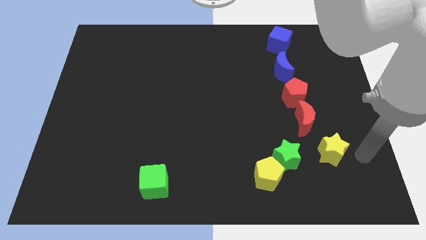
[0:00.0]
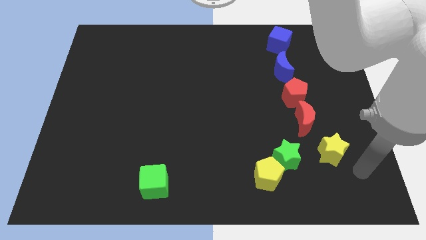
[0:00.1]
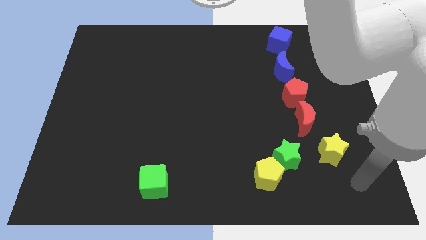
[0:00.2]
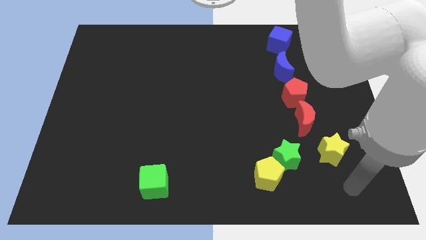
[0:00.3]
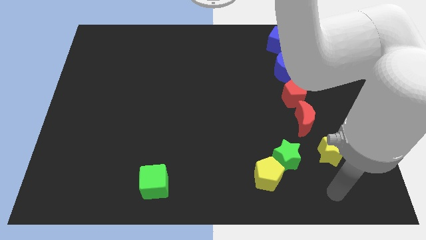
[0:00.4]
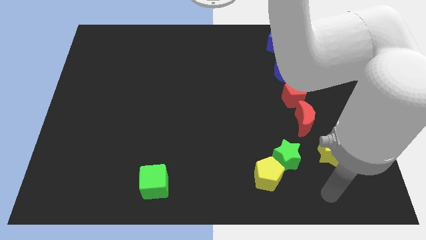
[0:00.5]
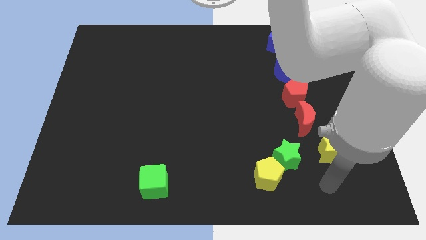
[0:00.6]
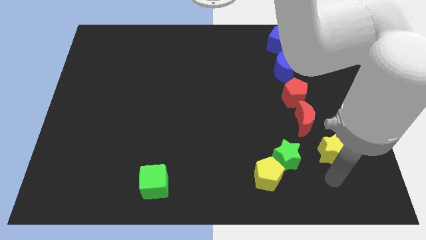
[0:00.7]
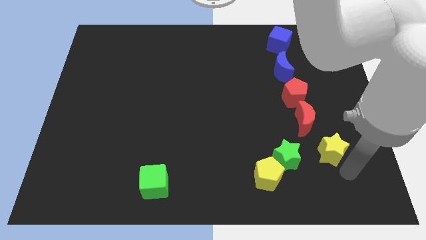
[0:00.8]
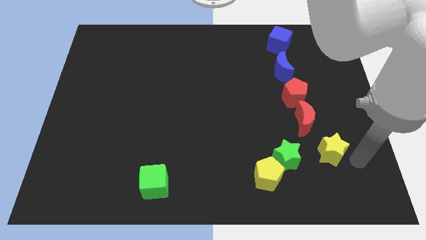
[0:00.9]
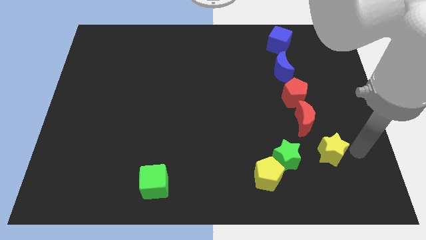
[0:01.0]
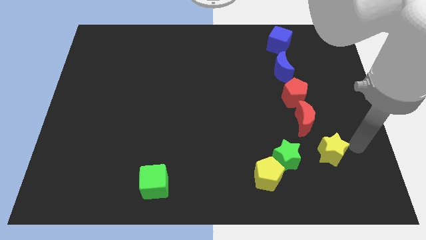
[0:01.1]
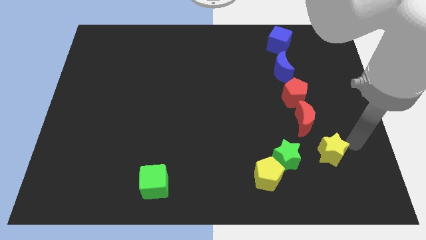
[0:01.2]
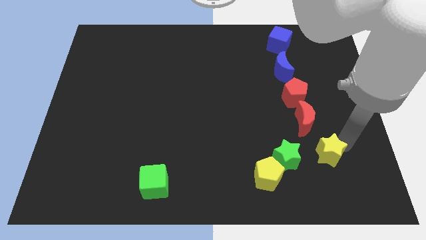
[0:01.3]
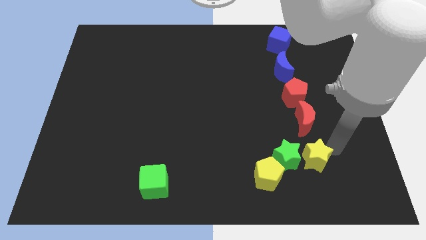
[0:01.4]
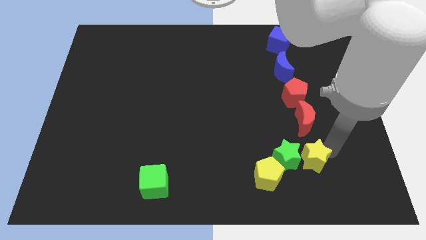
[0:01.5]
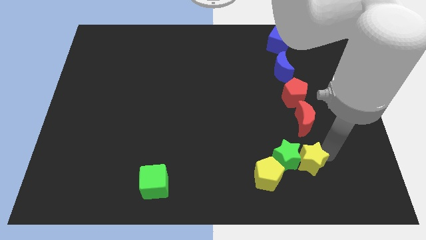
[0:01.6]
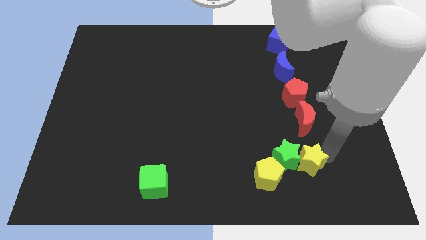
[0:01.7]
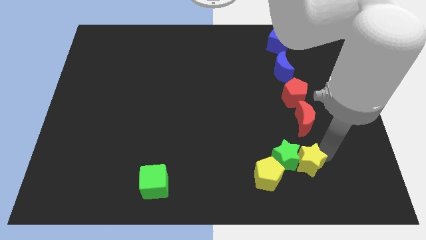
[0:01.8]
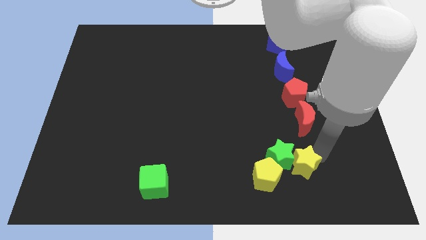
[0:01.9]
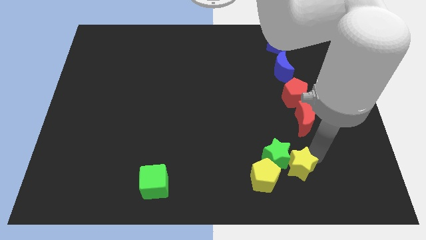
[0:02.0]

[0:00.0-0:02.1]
move the yellow star at the right side bottom of the green star

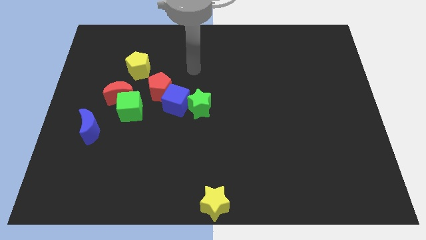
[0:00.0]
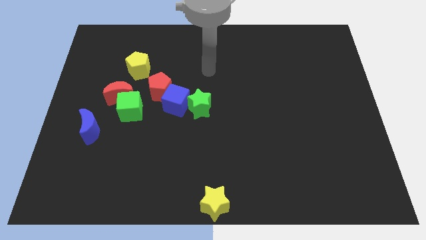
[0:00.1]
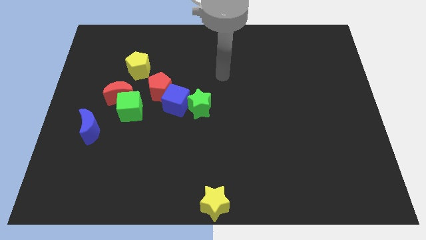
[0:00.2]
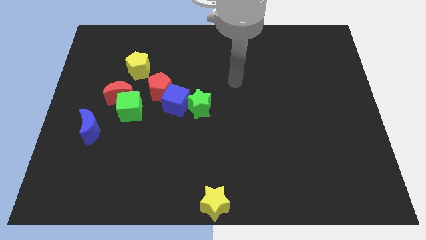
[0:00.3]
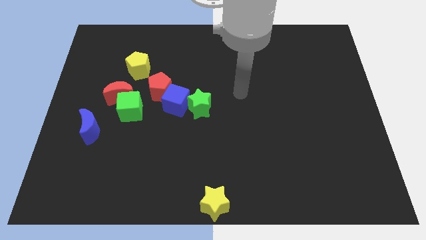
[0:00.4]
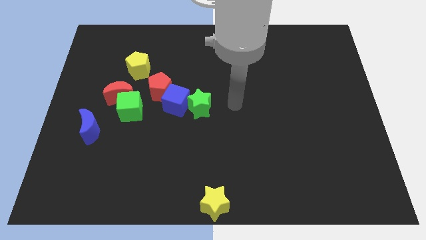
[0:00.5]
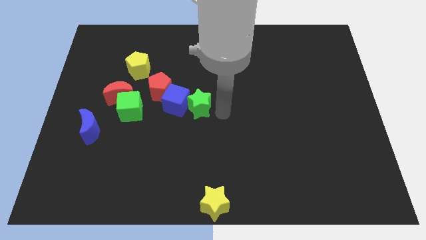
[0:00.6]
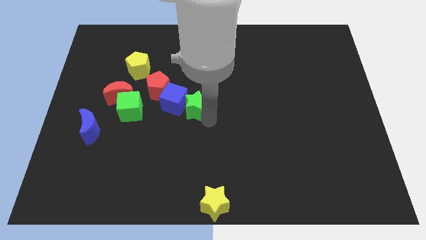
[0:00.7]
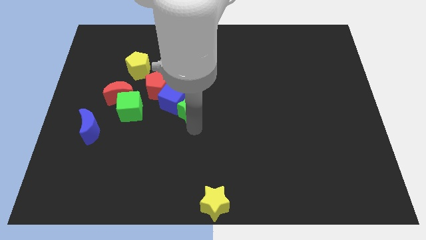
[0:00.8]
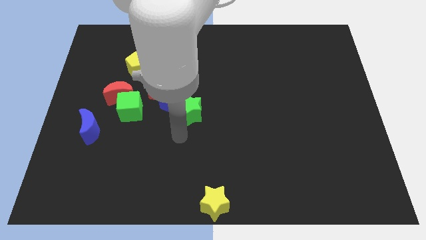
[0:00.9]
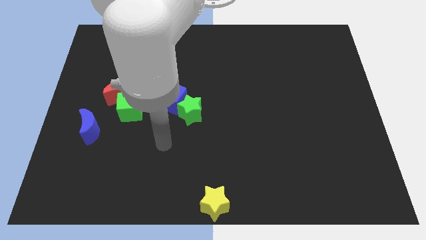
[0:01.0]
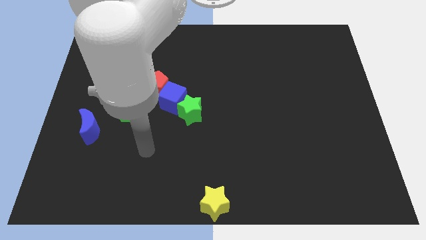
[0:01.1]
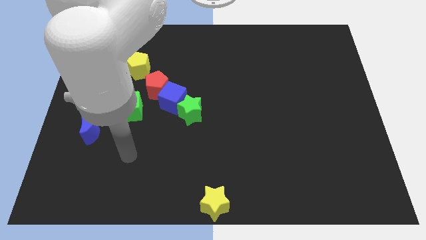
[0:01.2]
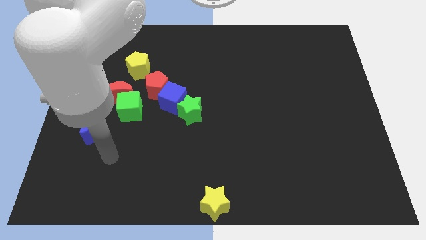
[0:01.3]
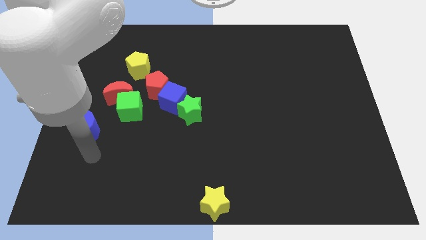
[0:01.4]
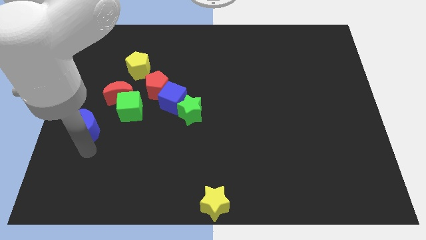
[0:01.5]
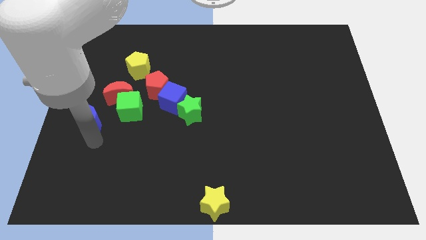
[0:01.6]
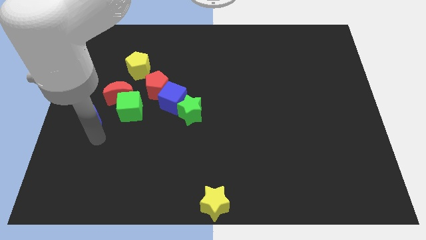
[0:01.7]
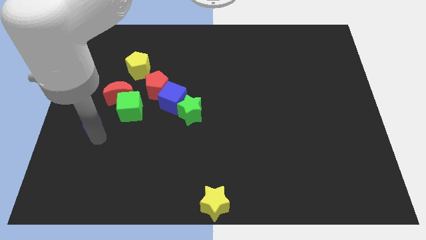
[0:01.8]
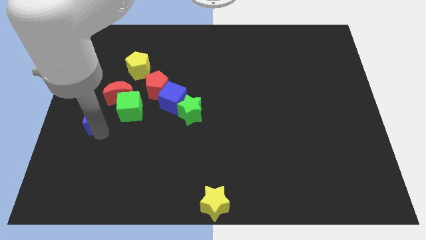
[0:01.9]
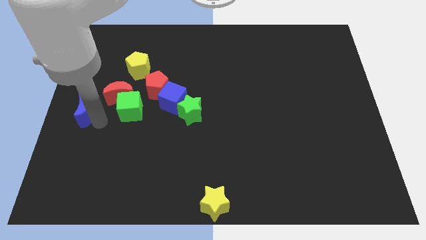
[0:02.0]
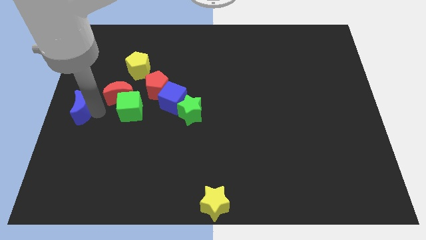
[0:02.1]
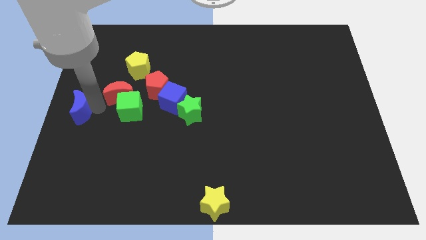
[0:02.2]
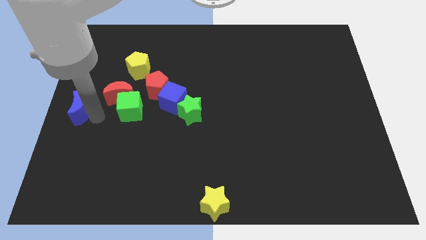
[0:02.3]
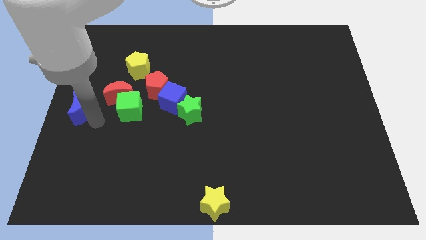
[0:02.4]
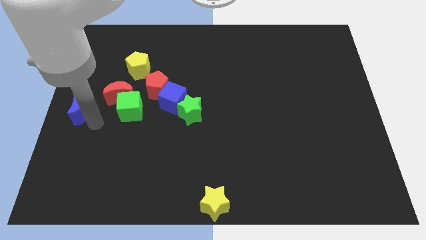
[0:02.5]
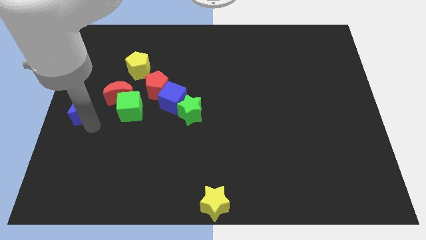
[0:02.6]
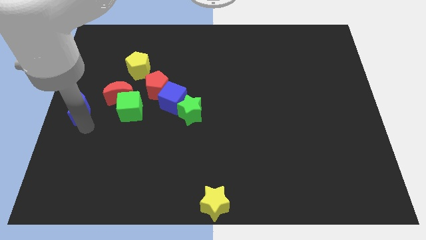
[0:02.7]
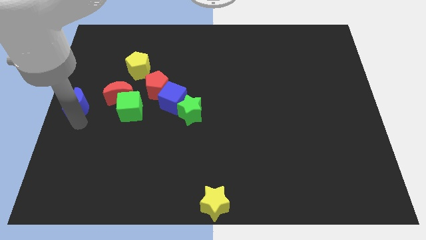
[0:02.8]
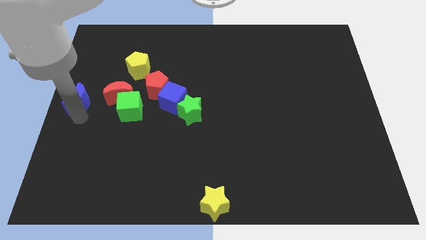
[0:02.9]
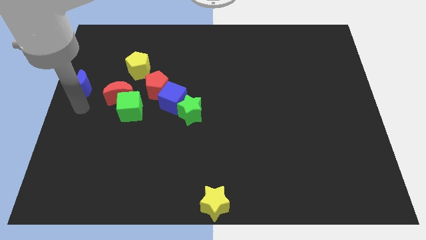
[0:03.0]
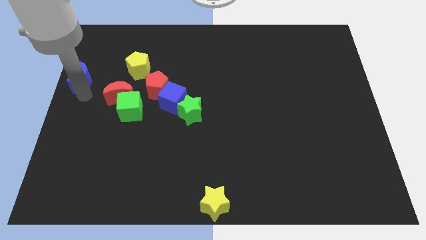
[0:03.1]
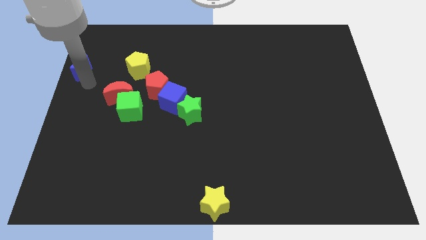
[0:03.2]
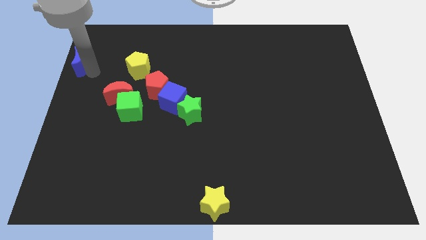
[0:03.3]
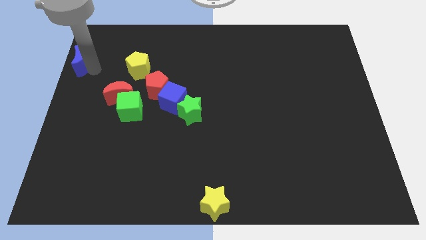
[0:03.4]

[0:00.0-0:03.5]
move the blue crescent to the top left of the board

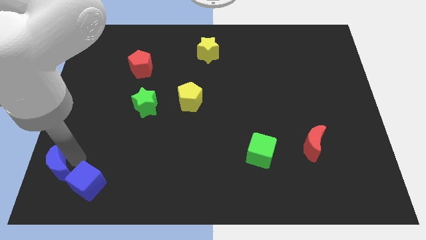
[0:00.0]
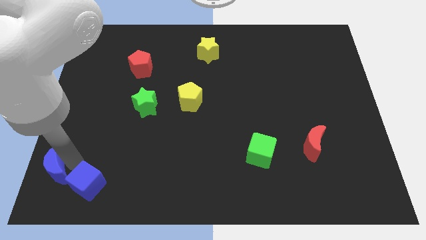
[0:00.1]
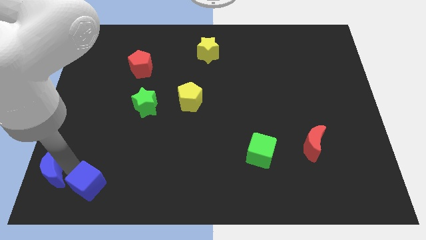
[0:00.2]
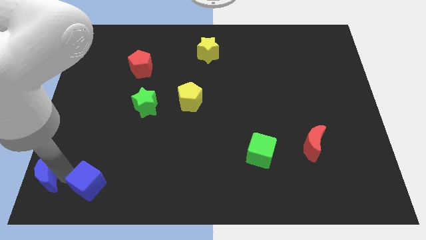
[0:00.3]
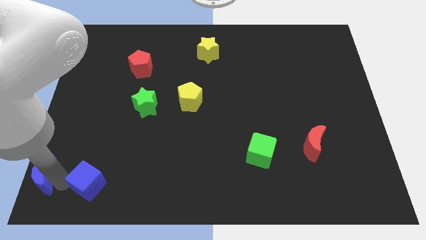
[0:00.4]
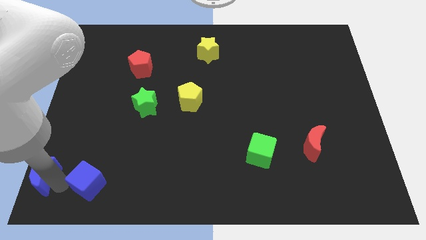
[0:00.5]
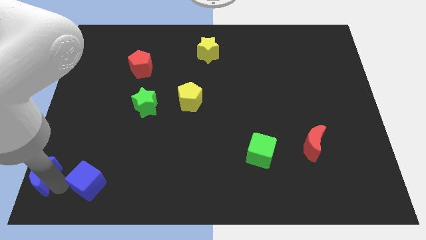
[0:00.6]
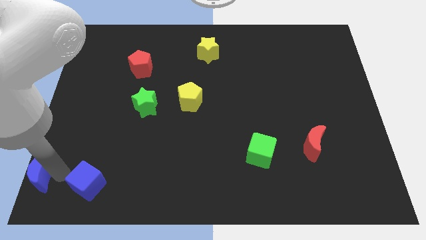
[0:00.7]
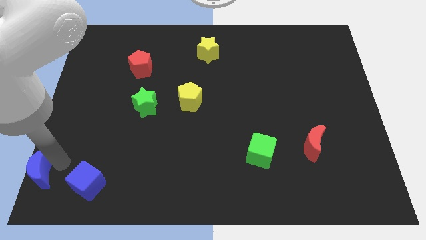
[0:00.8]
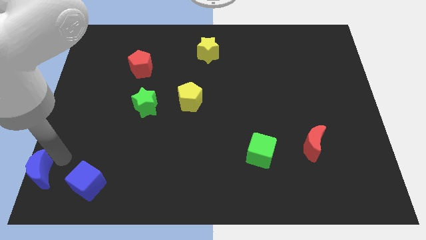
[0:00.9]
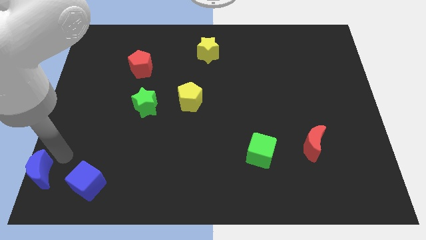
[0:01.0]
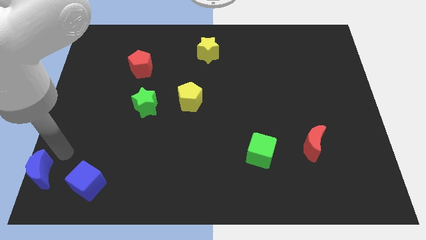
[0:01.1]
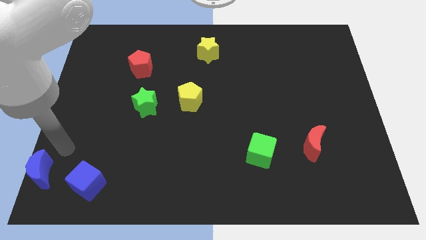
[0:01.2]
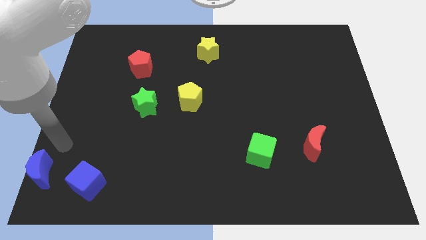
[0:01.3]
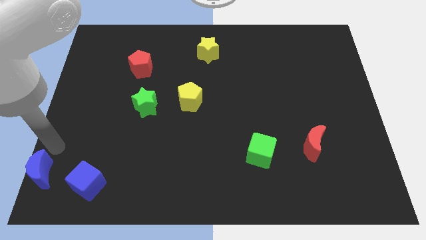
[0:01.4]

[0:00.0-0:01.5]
push the blue crescent away from the blue cube

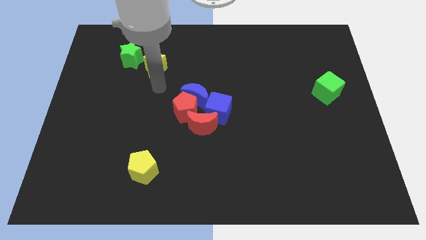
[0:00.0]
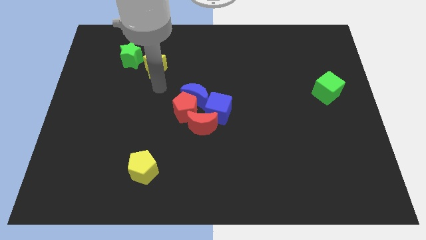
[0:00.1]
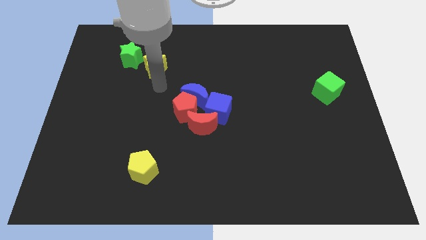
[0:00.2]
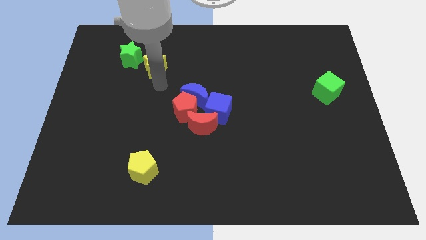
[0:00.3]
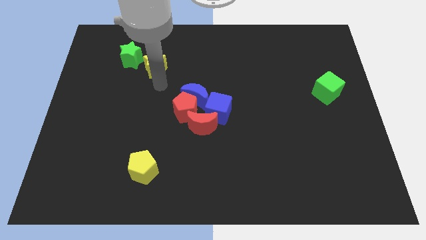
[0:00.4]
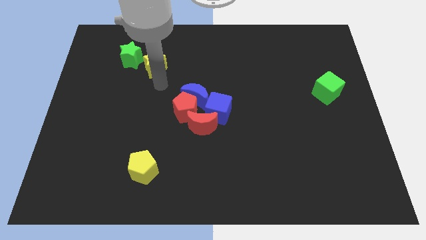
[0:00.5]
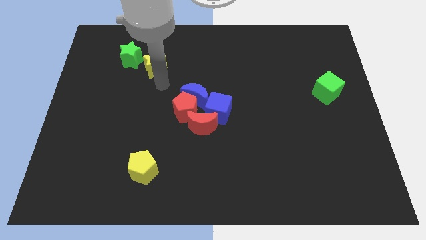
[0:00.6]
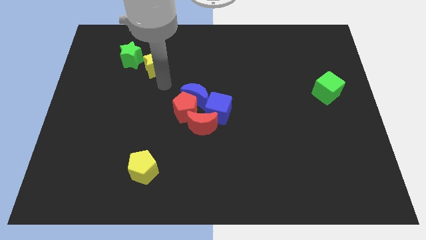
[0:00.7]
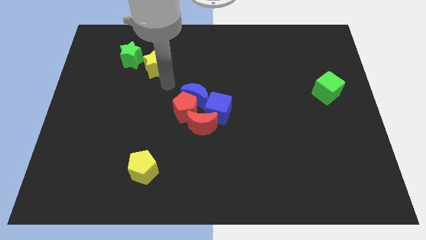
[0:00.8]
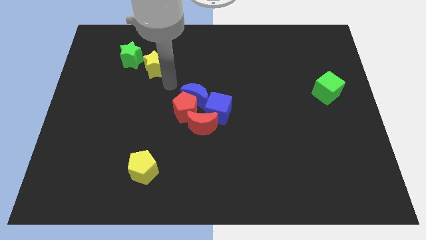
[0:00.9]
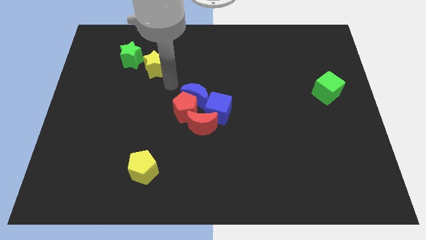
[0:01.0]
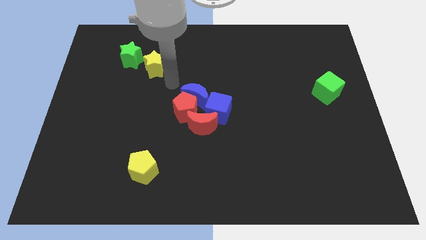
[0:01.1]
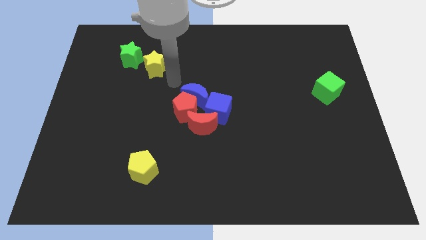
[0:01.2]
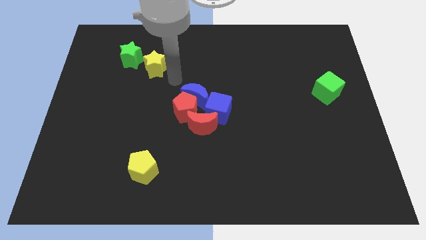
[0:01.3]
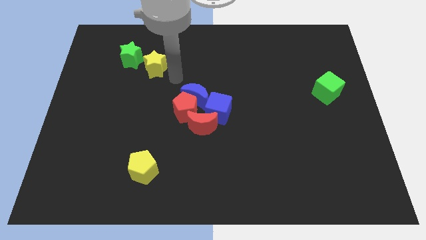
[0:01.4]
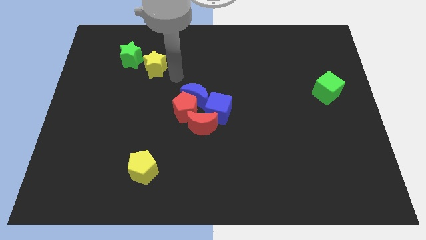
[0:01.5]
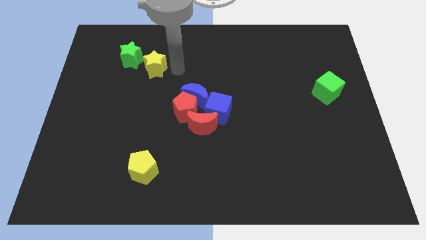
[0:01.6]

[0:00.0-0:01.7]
place your arm to the right side of the yellow star

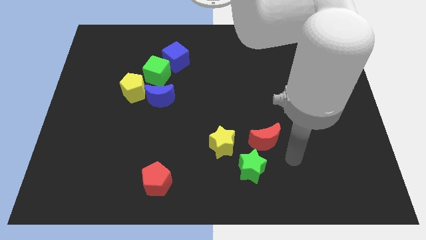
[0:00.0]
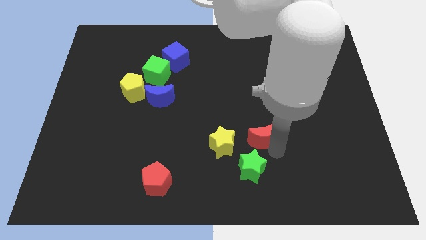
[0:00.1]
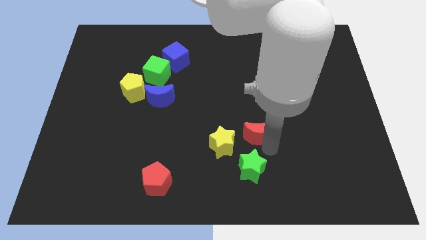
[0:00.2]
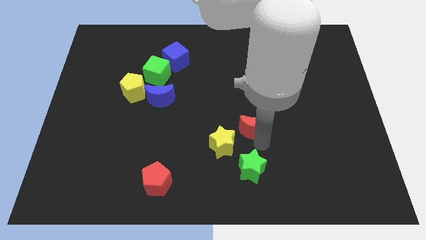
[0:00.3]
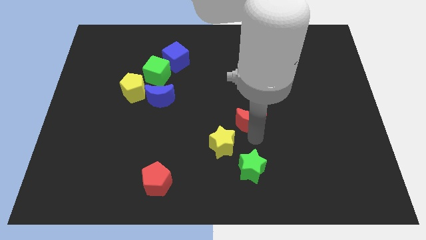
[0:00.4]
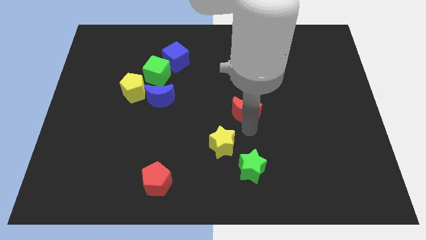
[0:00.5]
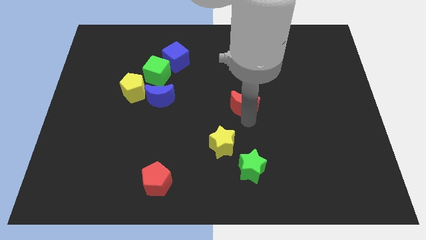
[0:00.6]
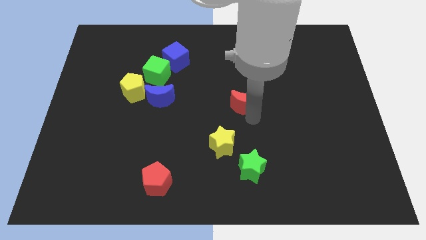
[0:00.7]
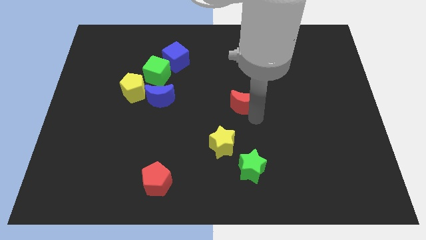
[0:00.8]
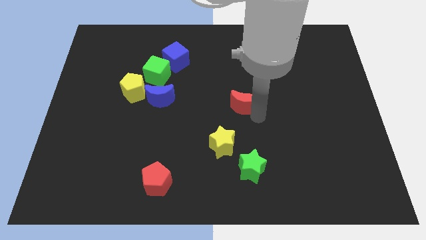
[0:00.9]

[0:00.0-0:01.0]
move the red crescent upwards
